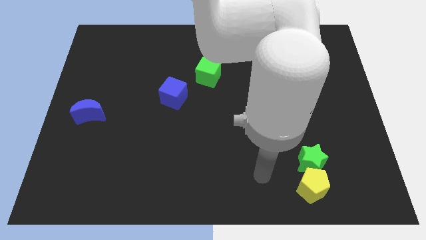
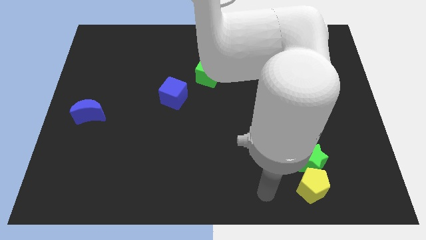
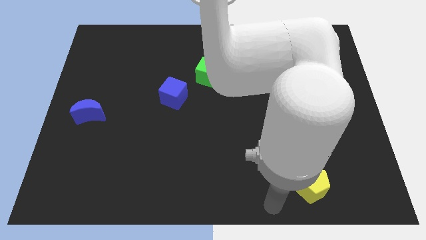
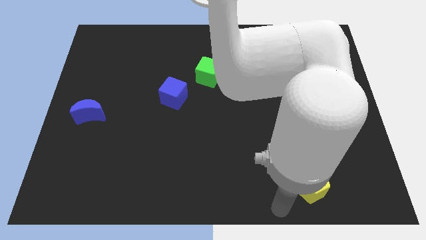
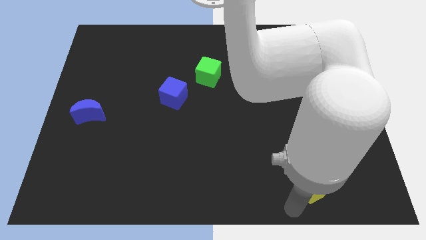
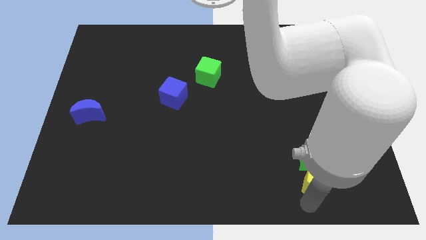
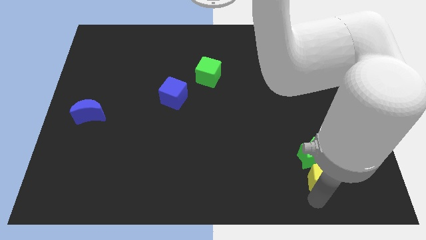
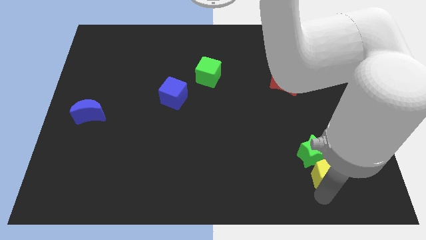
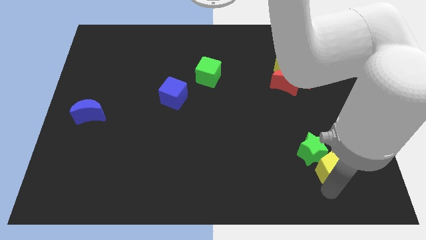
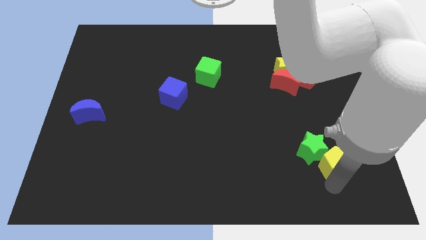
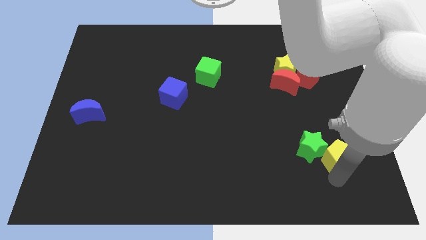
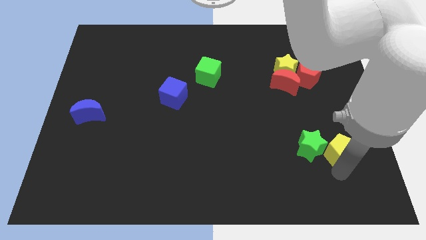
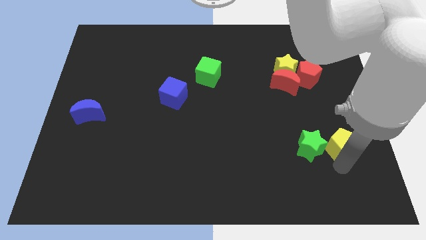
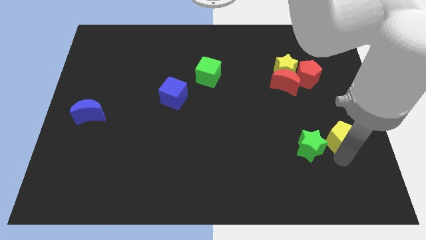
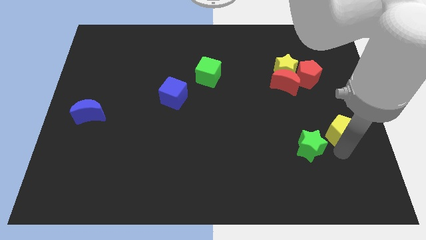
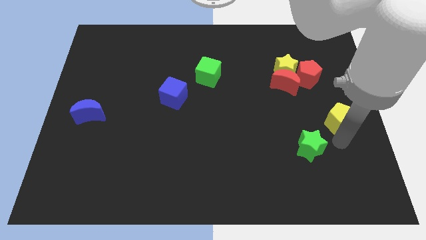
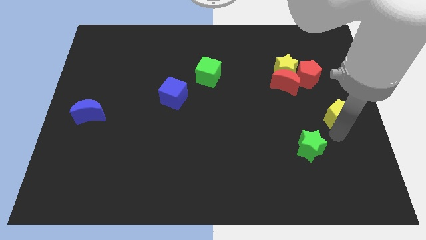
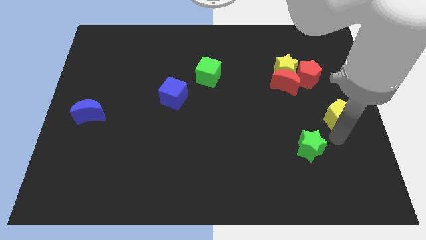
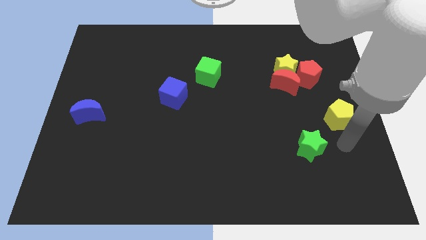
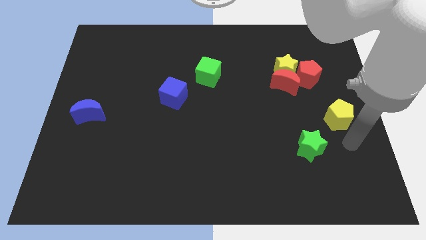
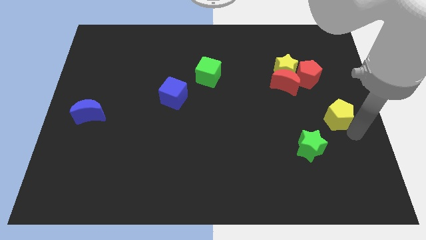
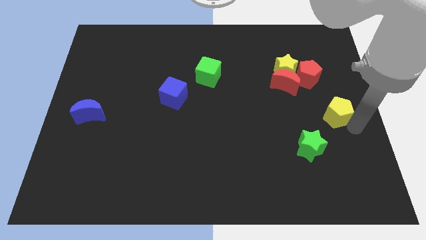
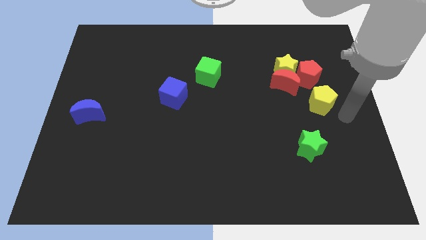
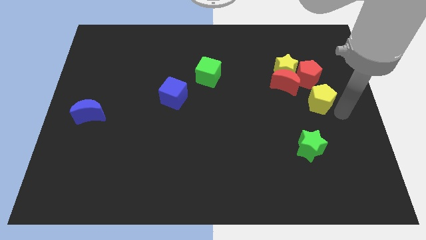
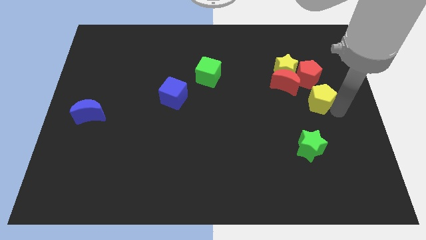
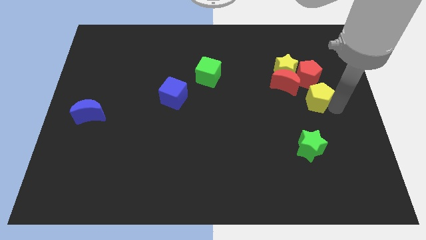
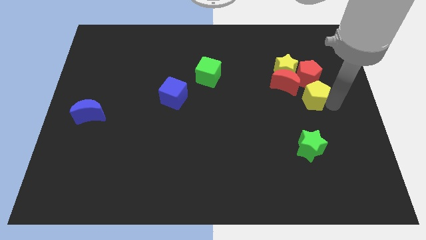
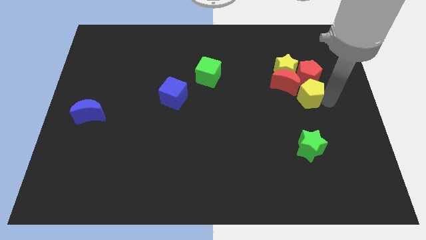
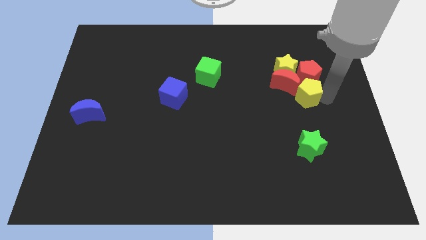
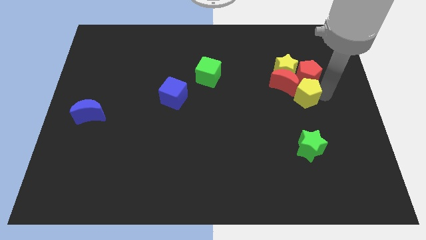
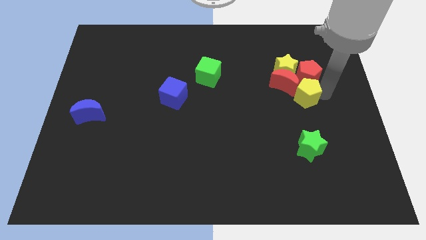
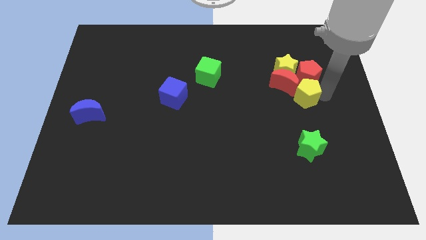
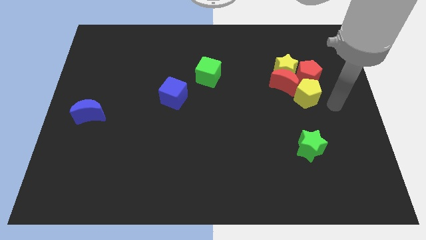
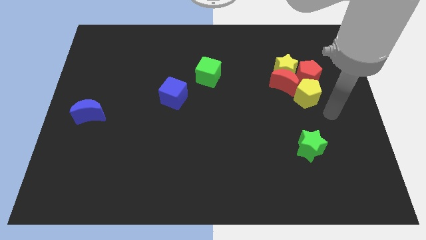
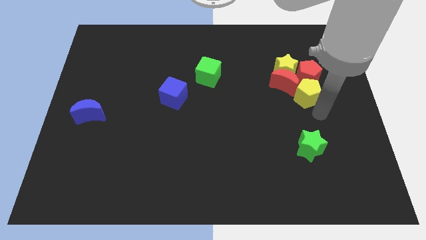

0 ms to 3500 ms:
push the yellow pentagon into the red moon

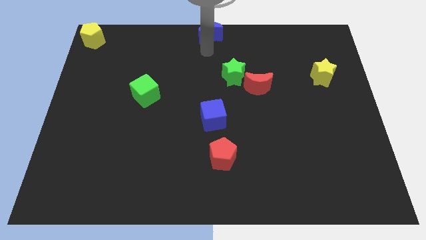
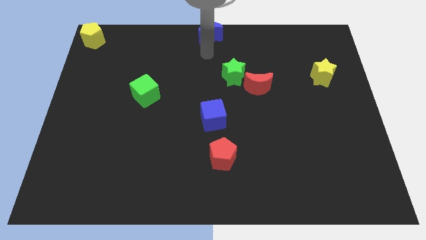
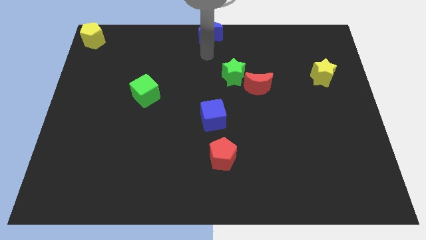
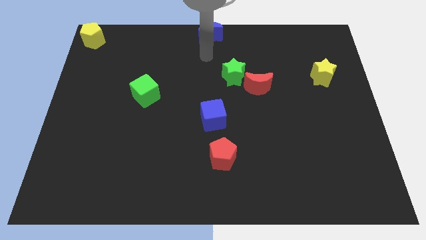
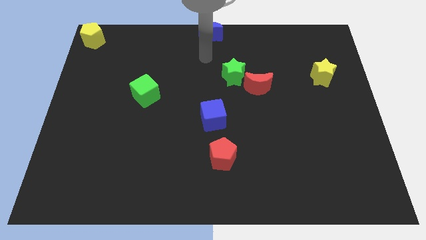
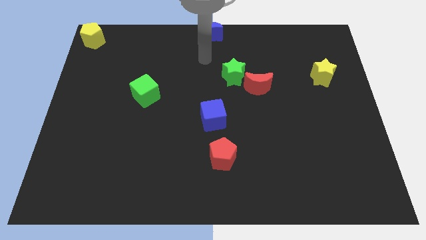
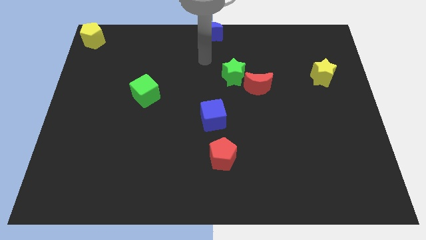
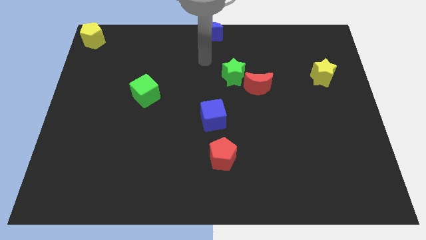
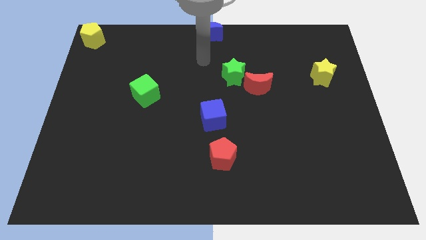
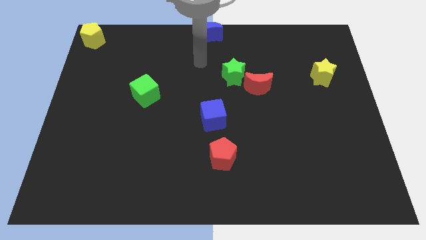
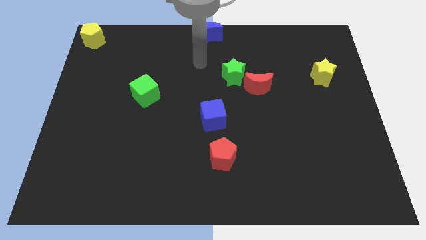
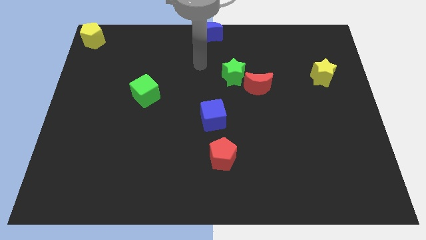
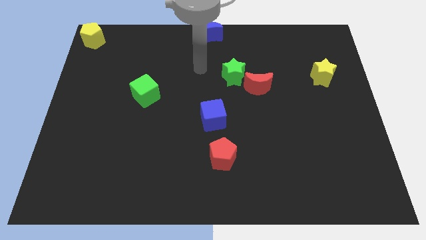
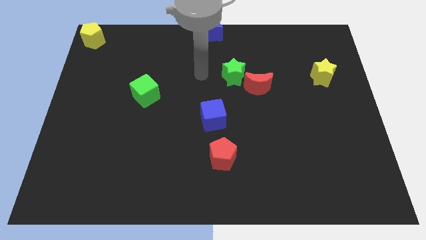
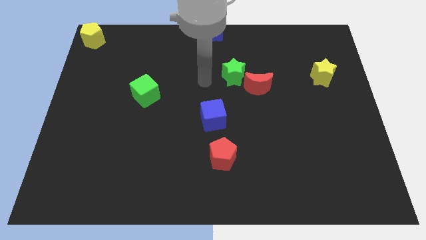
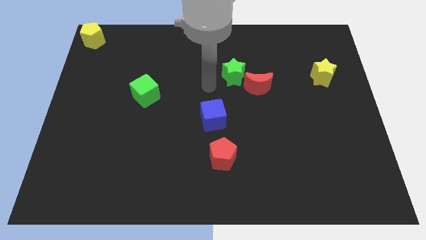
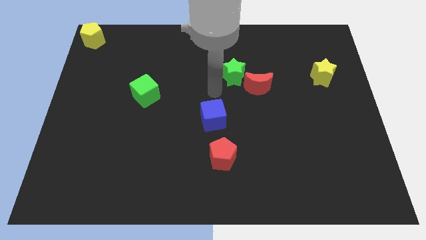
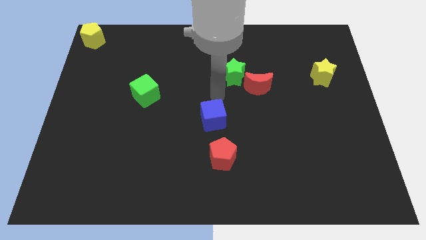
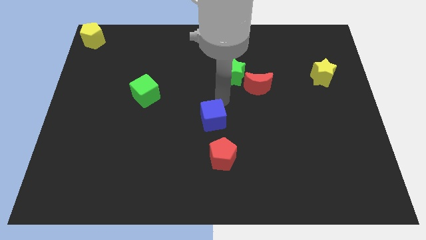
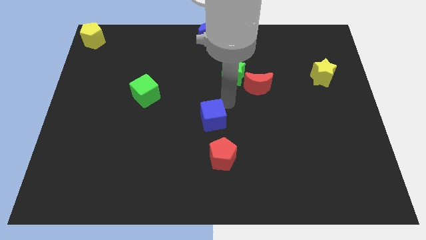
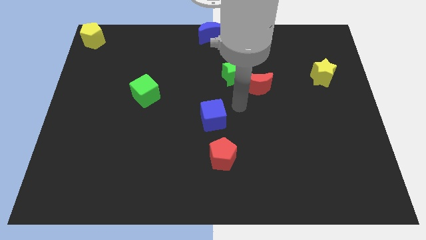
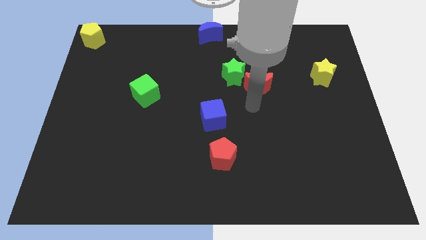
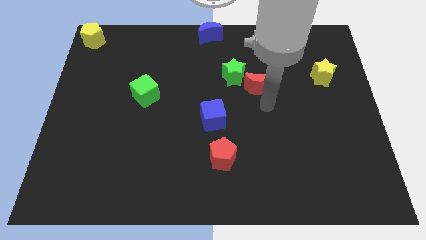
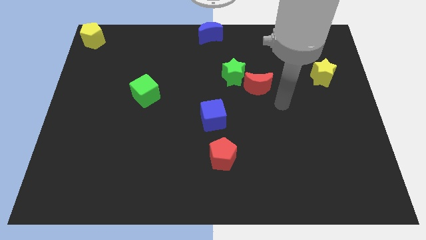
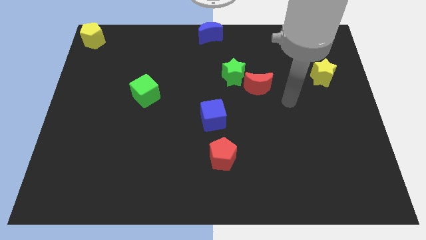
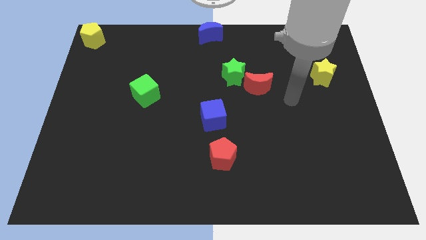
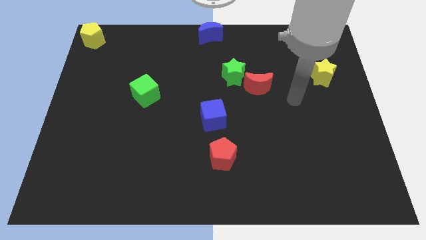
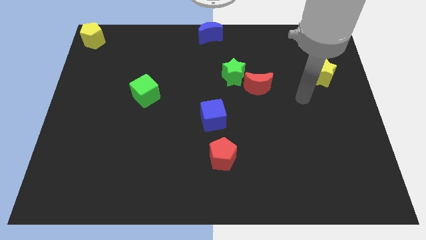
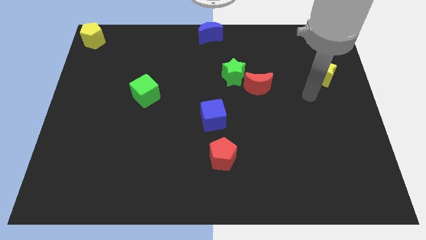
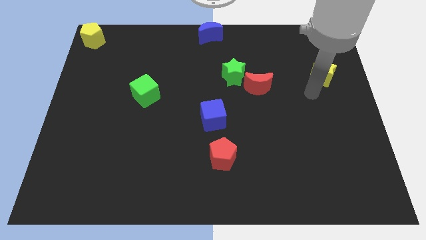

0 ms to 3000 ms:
move your hand towards the yellow star

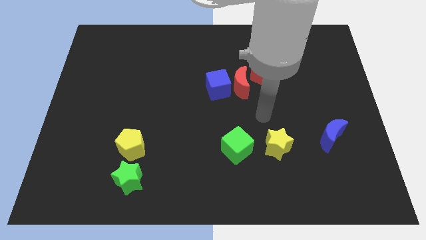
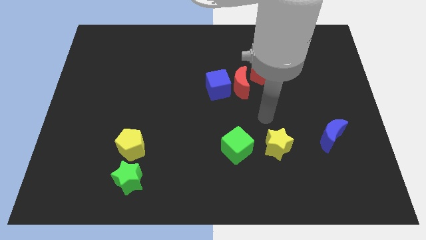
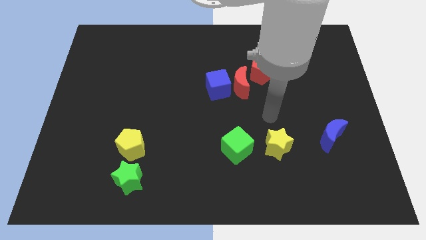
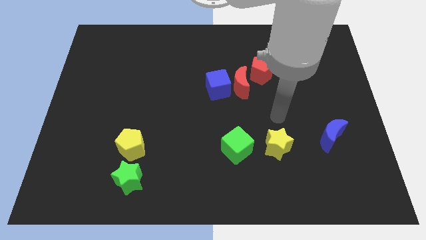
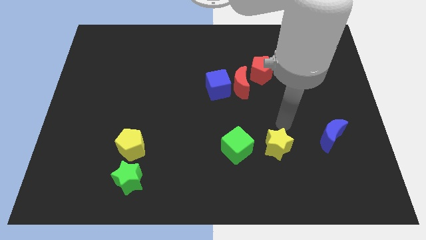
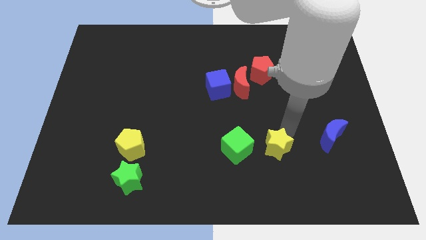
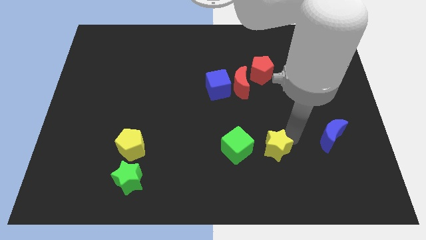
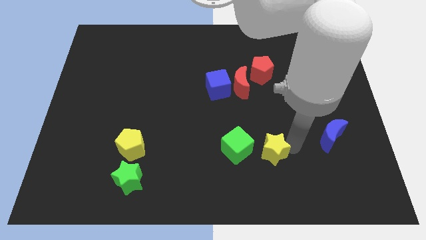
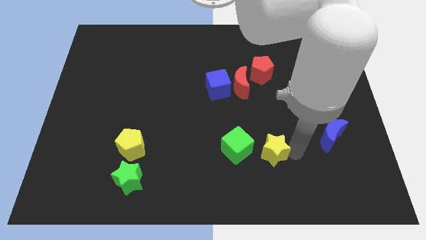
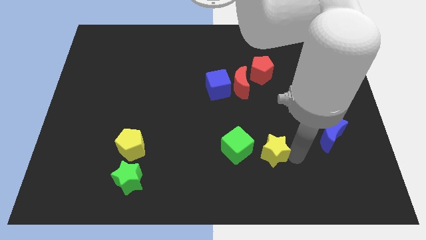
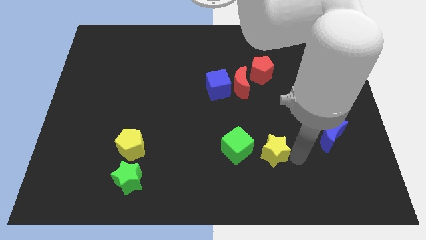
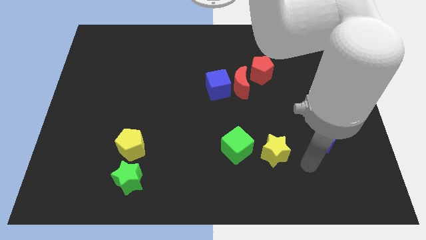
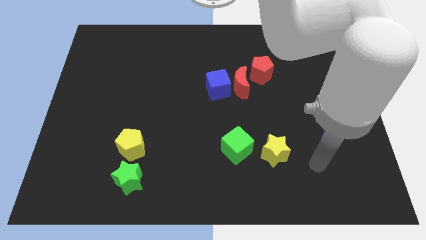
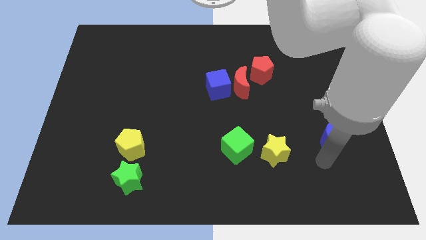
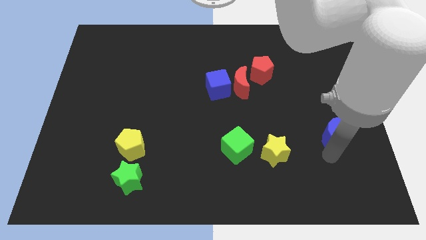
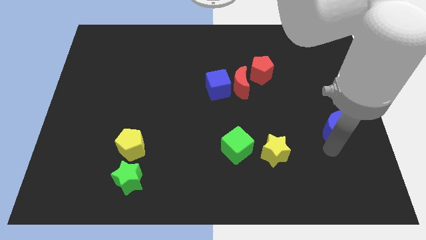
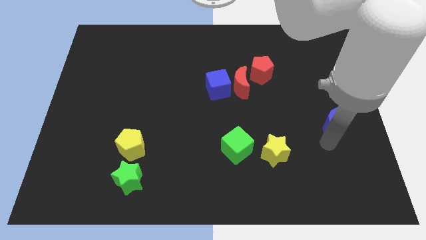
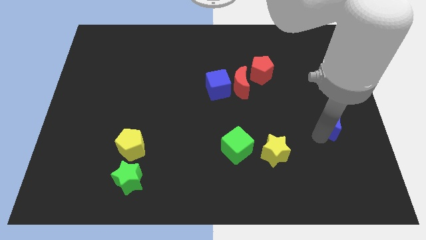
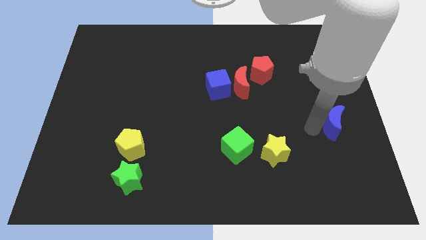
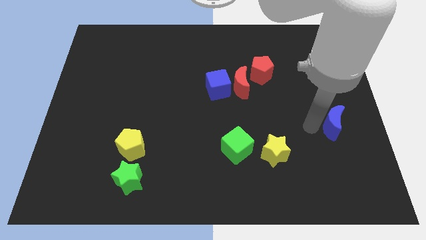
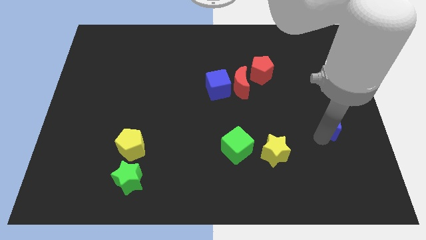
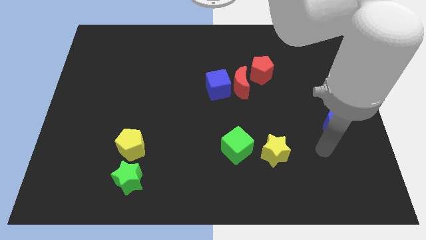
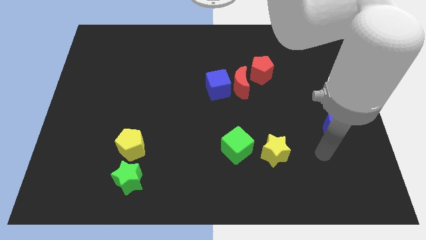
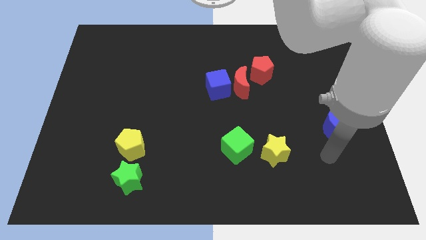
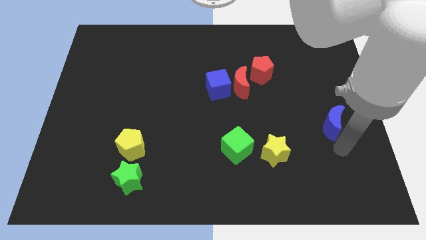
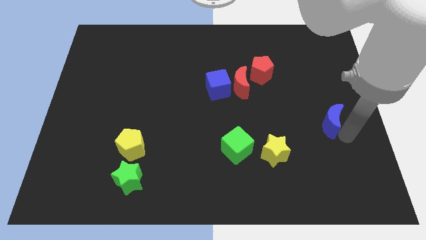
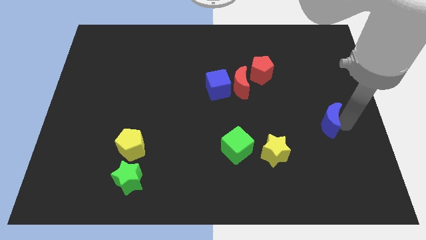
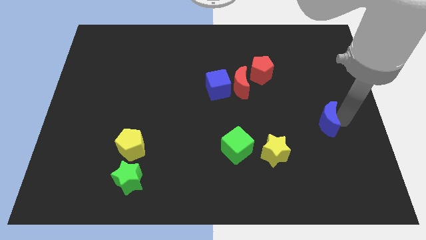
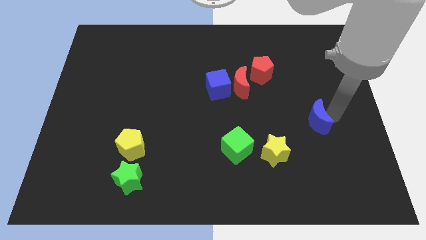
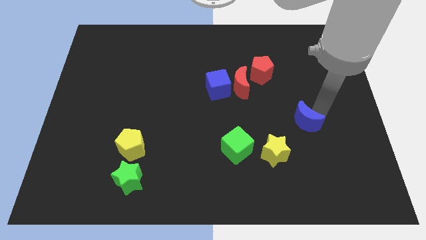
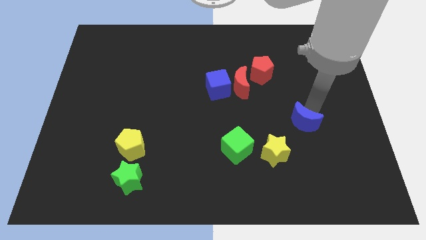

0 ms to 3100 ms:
place blue crescent slightly above
